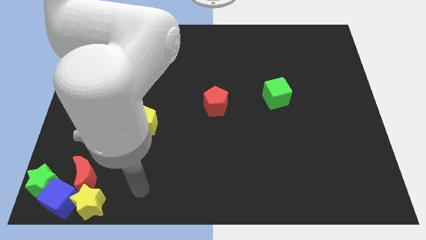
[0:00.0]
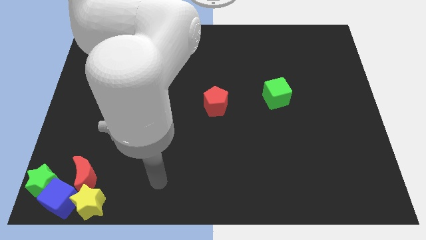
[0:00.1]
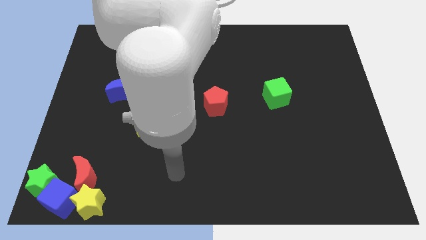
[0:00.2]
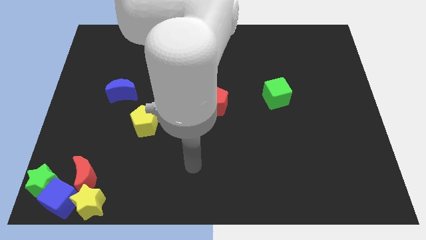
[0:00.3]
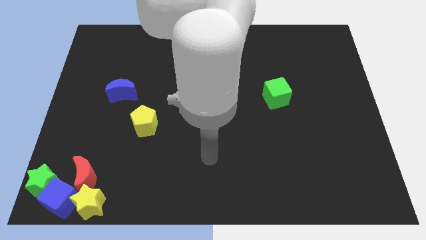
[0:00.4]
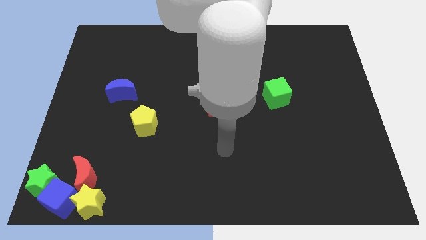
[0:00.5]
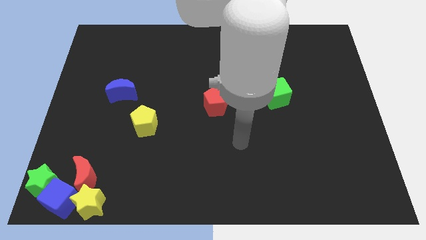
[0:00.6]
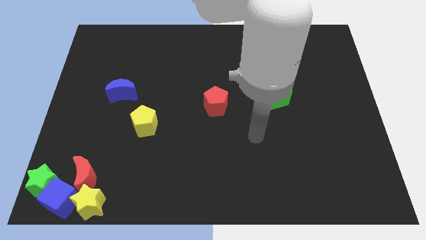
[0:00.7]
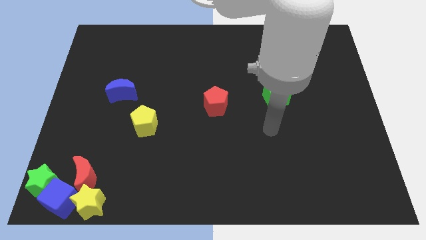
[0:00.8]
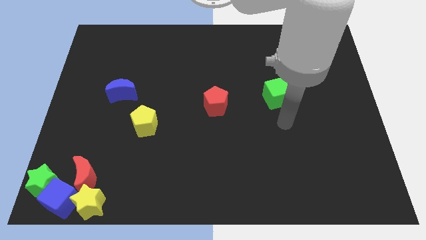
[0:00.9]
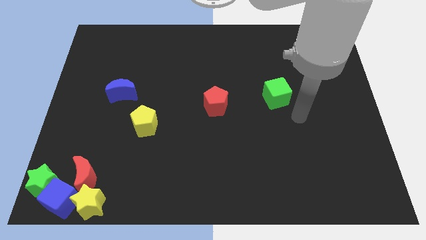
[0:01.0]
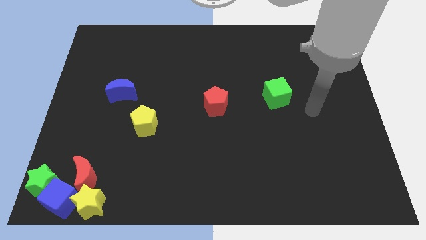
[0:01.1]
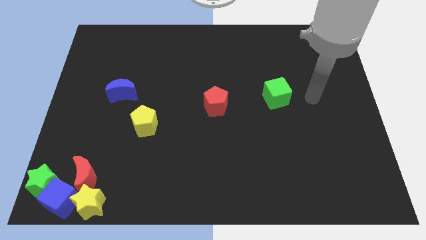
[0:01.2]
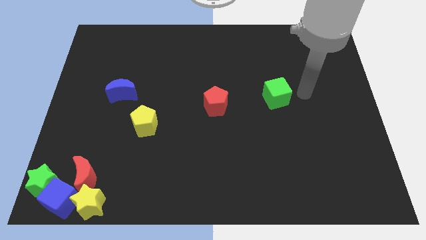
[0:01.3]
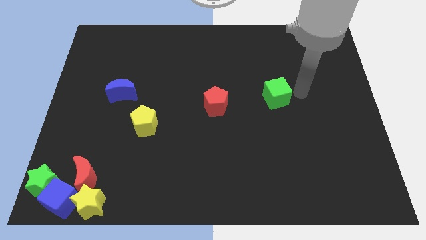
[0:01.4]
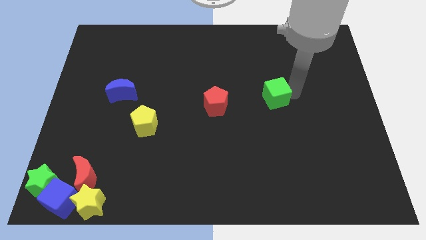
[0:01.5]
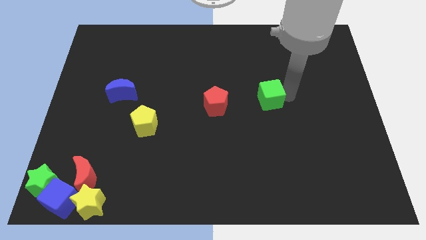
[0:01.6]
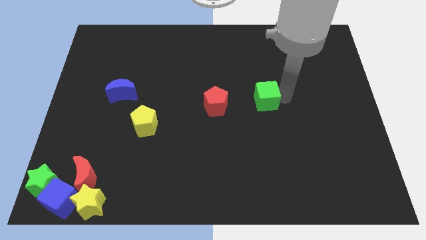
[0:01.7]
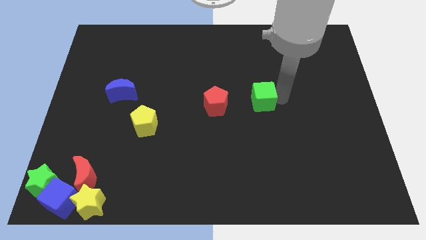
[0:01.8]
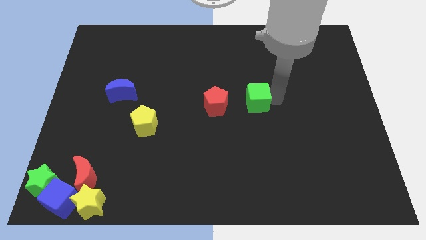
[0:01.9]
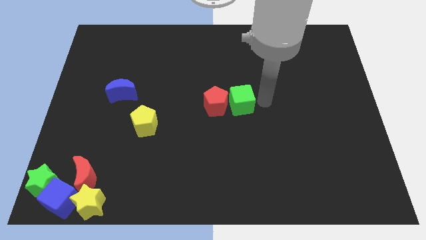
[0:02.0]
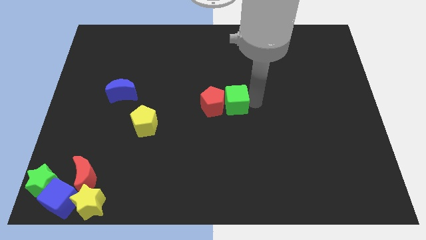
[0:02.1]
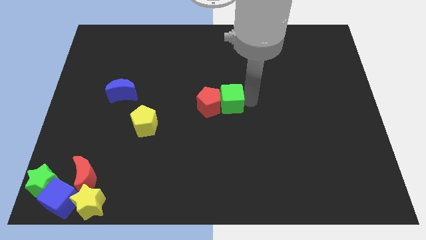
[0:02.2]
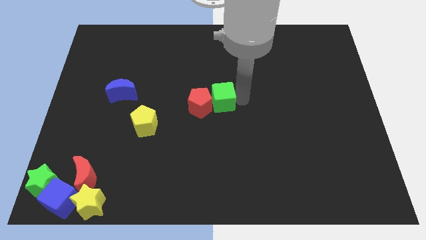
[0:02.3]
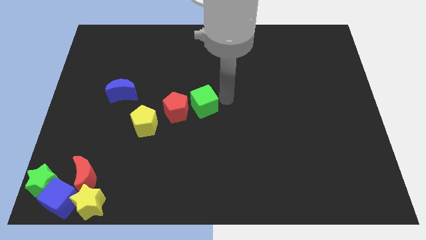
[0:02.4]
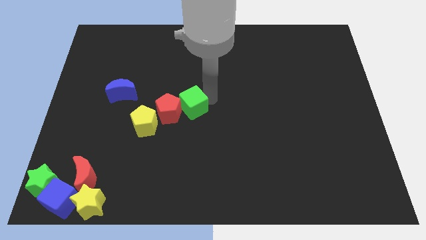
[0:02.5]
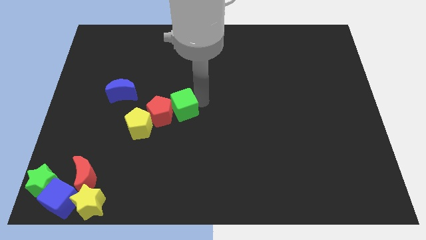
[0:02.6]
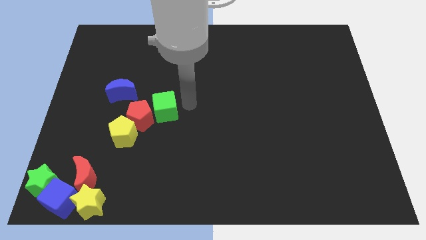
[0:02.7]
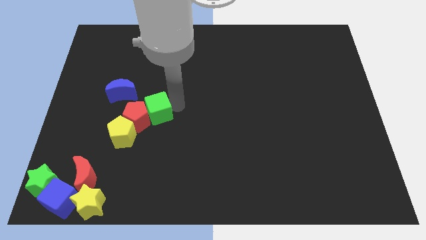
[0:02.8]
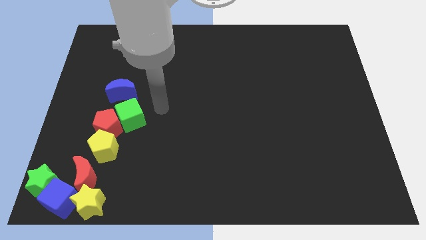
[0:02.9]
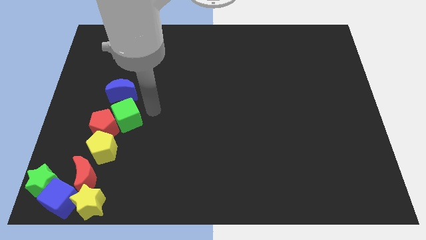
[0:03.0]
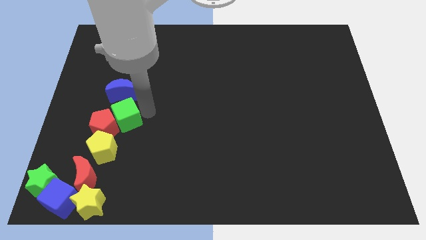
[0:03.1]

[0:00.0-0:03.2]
place green cube below blue crescent

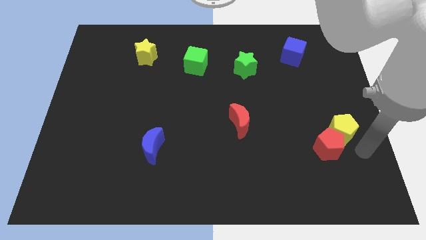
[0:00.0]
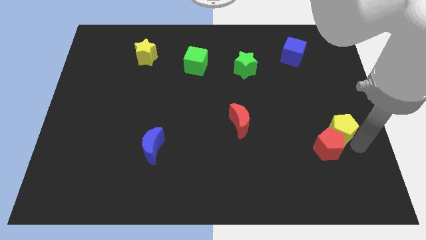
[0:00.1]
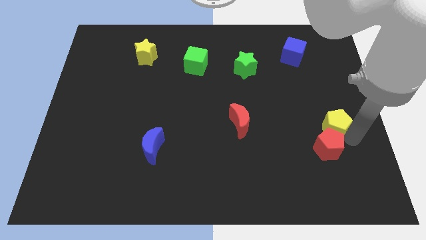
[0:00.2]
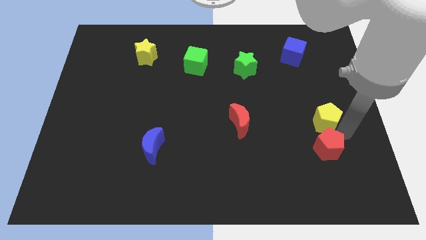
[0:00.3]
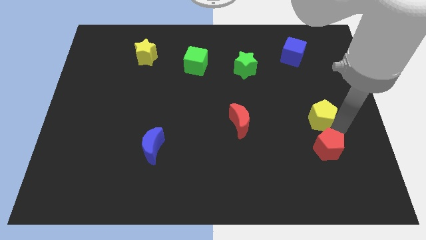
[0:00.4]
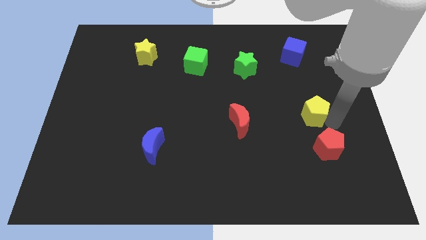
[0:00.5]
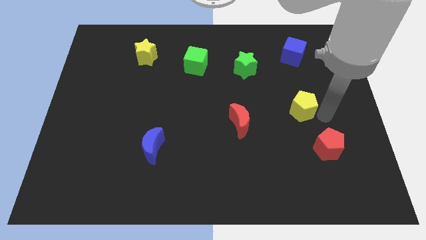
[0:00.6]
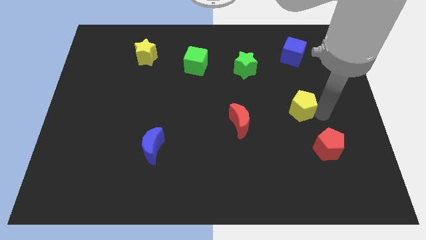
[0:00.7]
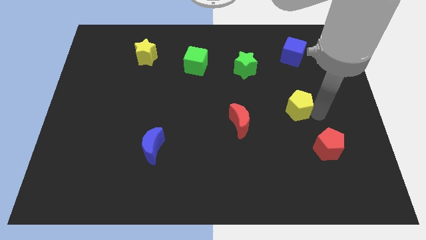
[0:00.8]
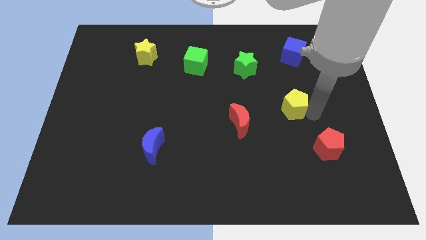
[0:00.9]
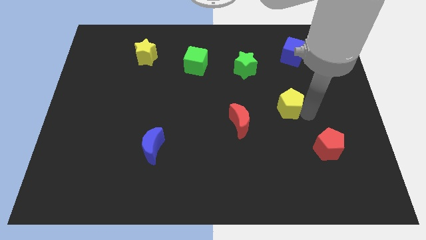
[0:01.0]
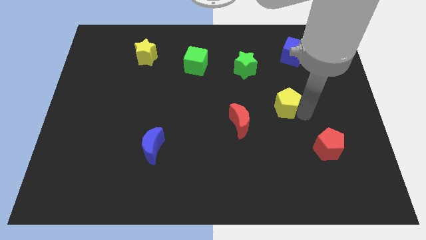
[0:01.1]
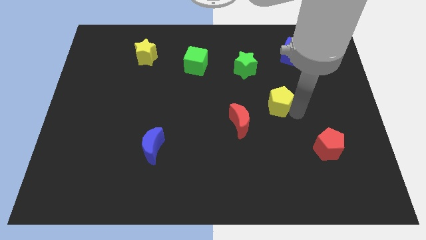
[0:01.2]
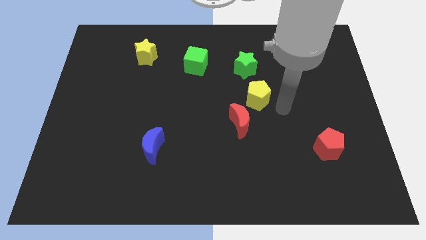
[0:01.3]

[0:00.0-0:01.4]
move the yellow pentagon away from the top side of the red pentagon

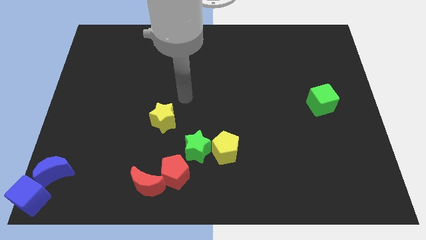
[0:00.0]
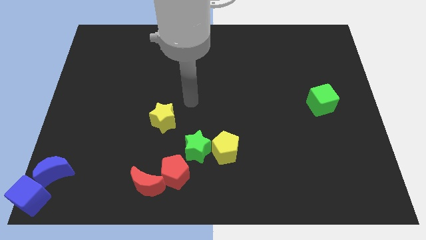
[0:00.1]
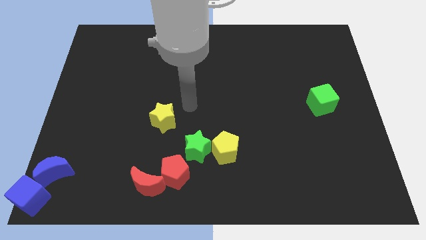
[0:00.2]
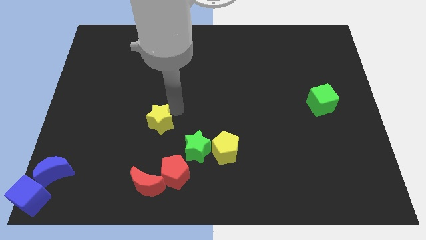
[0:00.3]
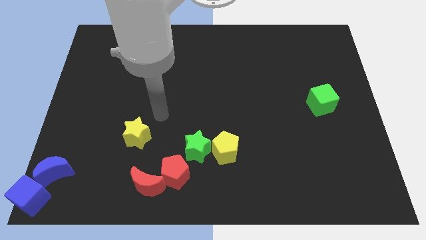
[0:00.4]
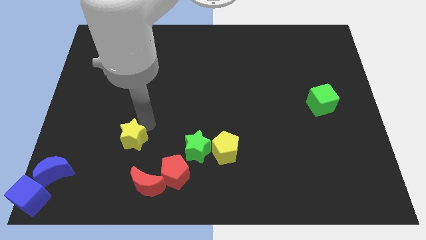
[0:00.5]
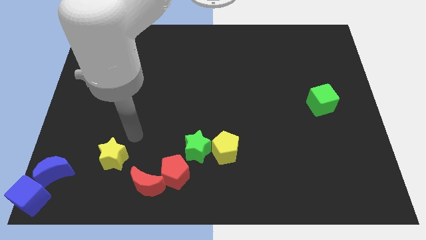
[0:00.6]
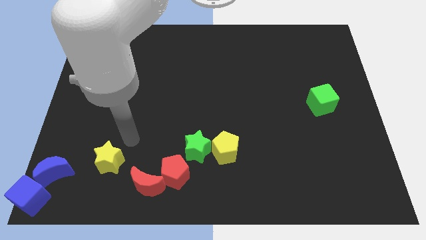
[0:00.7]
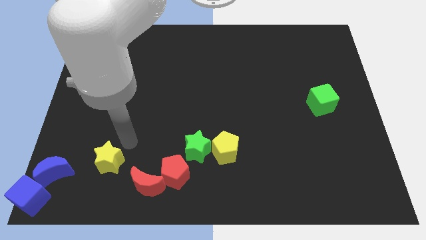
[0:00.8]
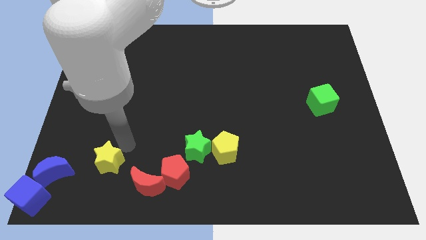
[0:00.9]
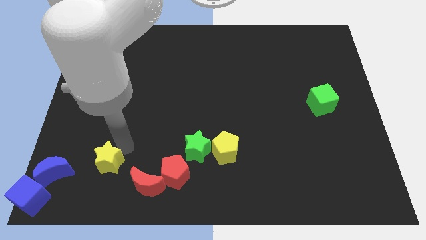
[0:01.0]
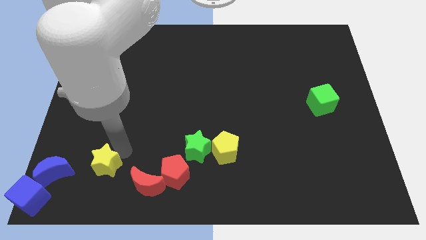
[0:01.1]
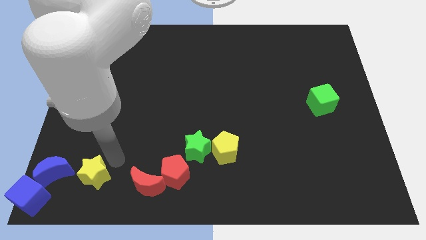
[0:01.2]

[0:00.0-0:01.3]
place the yellow star parallel to the red moon

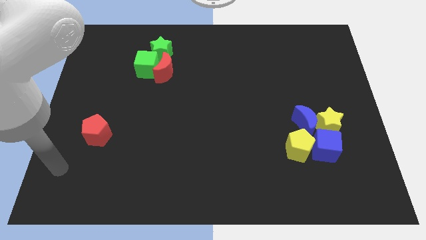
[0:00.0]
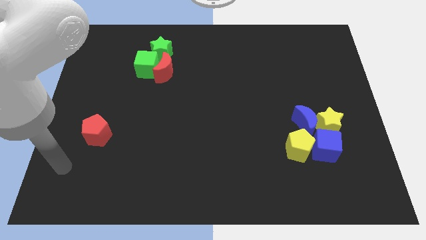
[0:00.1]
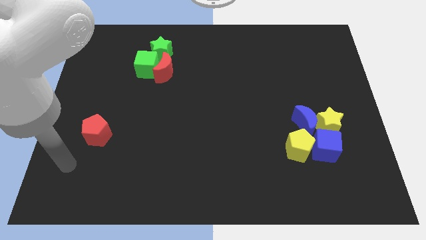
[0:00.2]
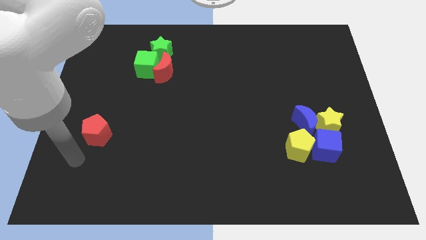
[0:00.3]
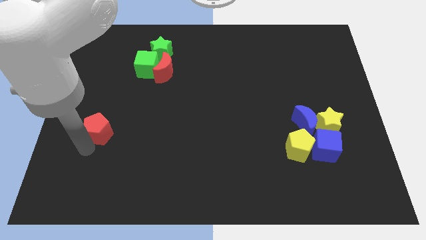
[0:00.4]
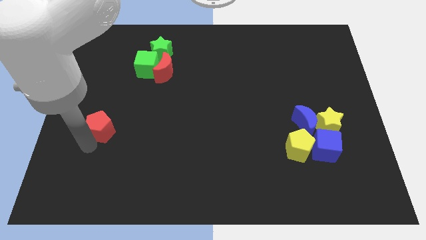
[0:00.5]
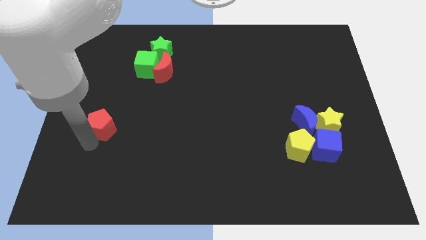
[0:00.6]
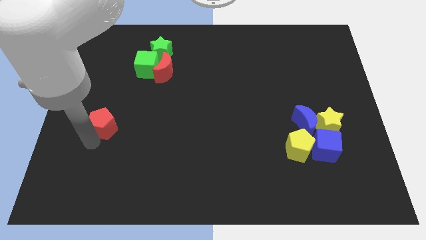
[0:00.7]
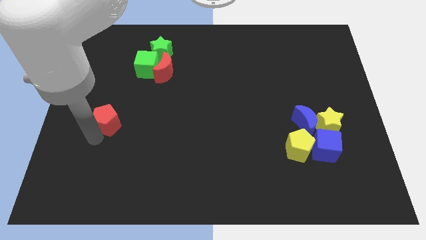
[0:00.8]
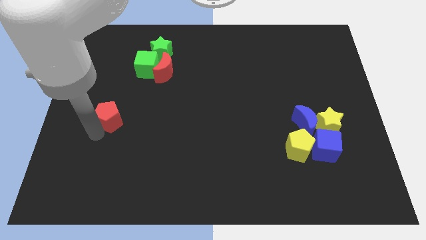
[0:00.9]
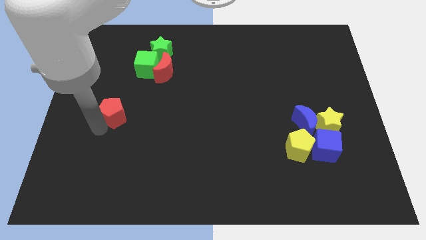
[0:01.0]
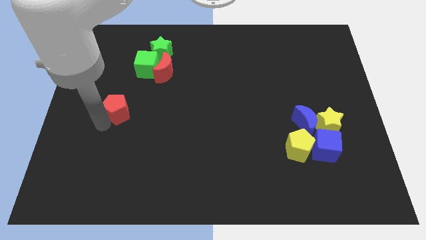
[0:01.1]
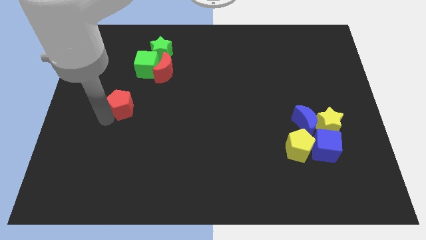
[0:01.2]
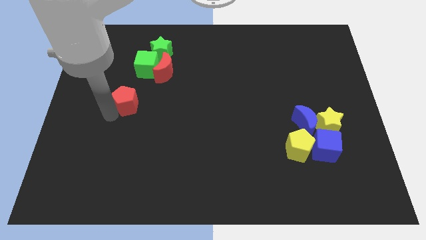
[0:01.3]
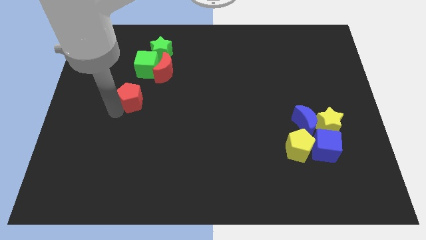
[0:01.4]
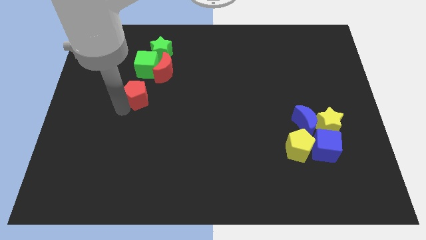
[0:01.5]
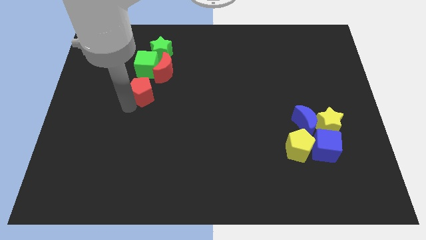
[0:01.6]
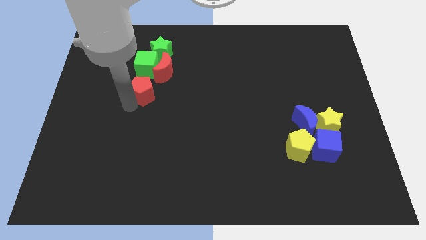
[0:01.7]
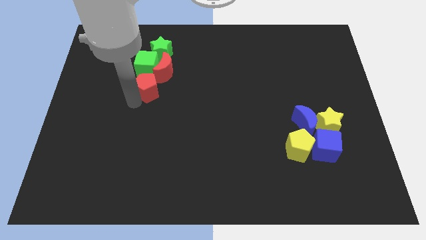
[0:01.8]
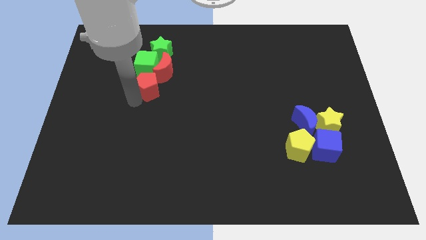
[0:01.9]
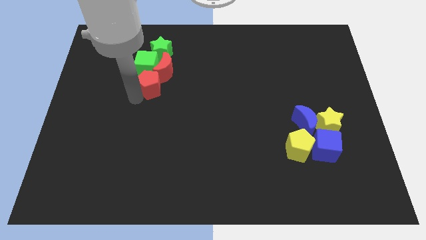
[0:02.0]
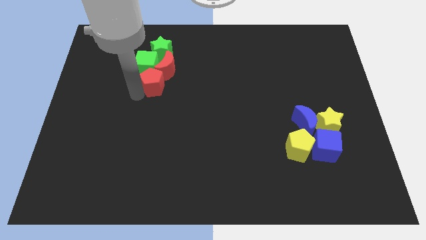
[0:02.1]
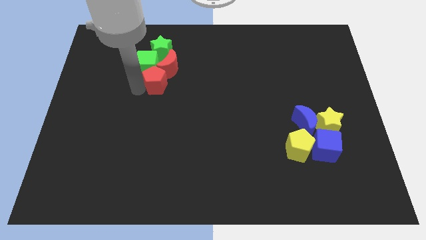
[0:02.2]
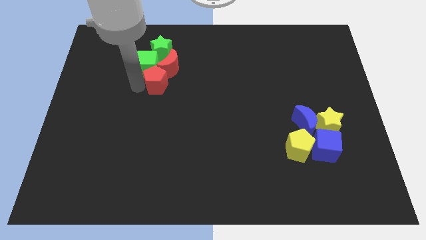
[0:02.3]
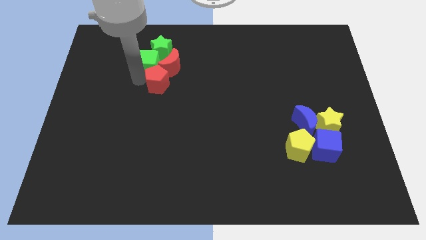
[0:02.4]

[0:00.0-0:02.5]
push the red pentagon into the red moon

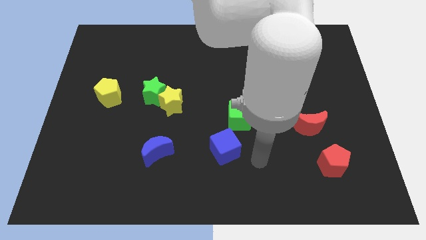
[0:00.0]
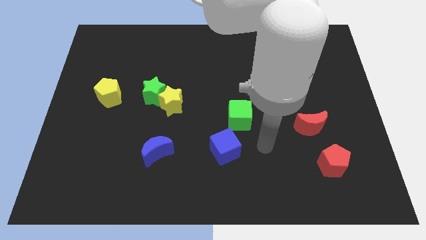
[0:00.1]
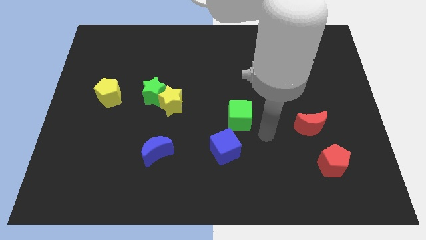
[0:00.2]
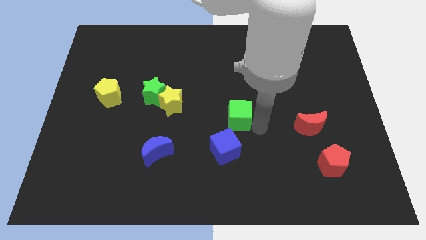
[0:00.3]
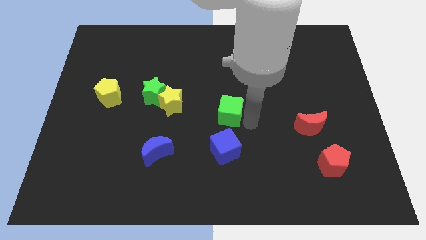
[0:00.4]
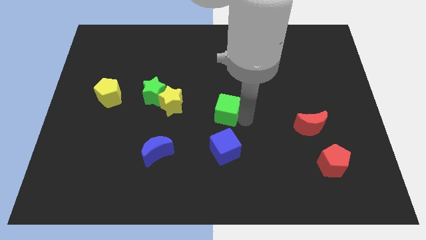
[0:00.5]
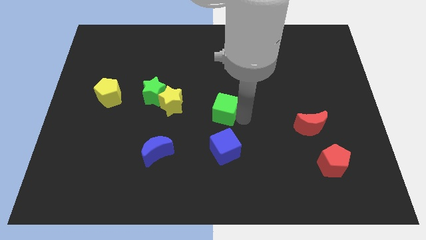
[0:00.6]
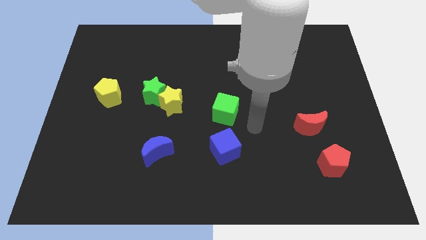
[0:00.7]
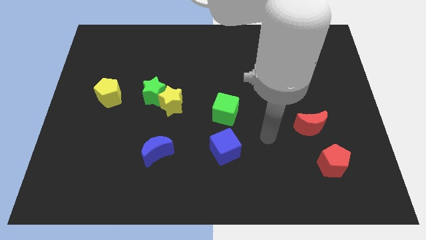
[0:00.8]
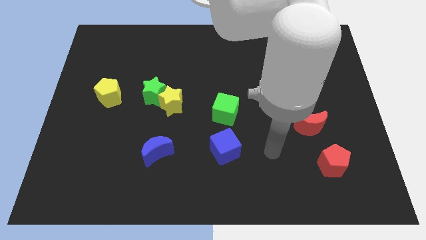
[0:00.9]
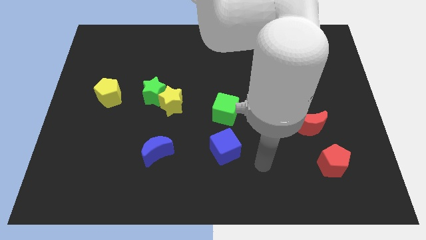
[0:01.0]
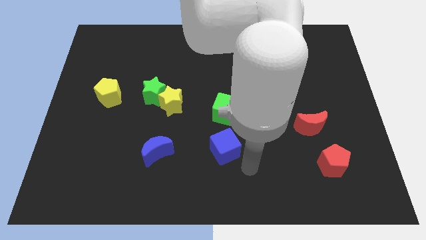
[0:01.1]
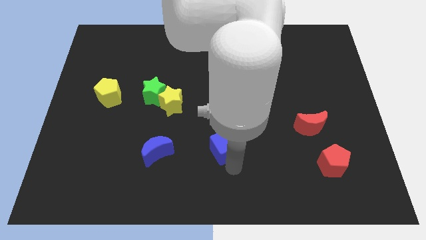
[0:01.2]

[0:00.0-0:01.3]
place green cube to the top of blue cube
